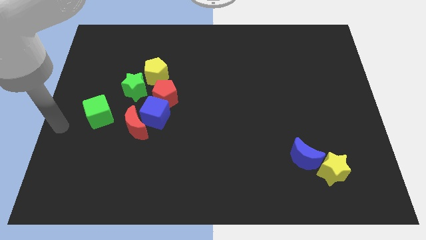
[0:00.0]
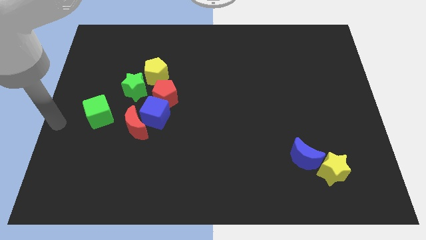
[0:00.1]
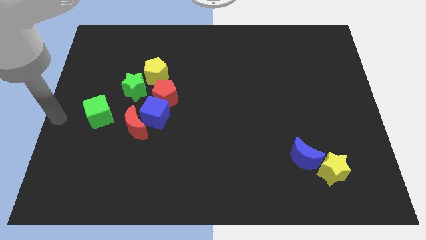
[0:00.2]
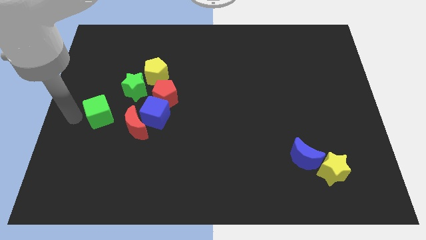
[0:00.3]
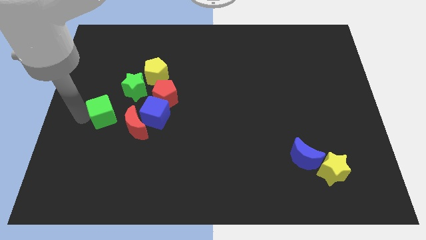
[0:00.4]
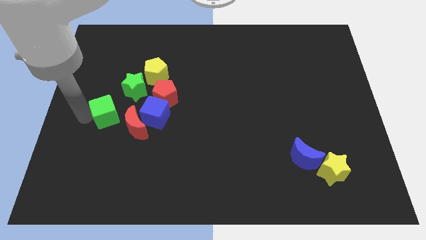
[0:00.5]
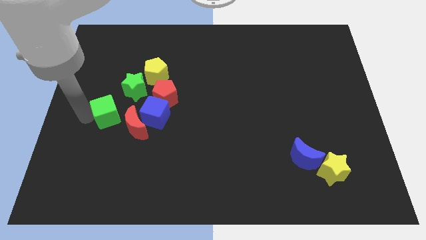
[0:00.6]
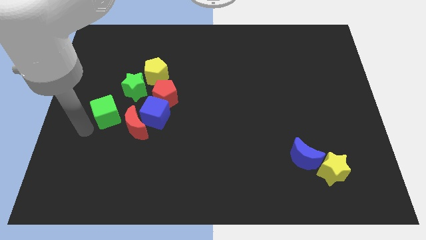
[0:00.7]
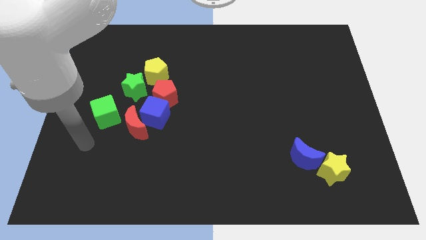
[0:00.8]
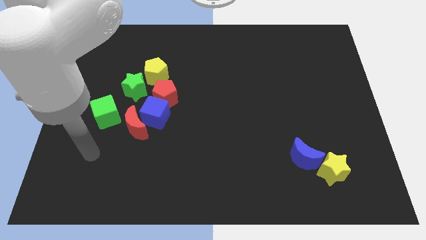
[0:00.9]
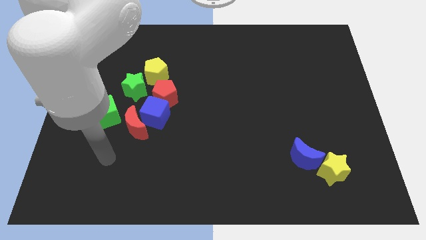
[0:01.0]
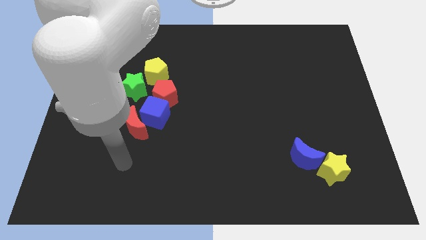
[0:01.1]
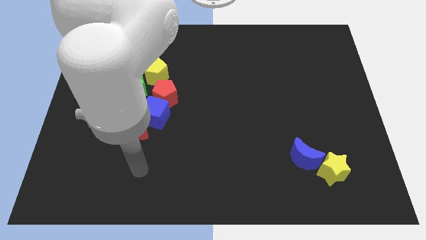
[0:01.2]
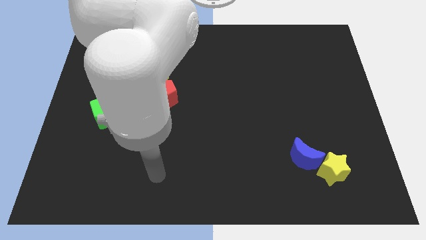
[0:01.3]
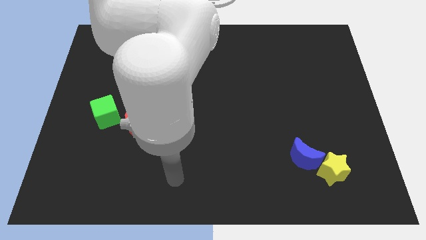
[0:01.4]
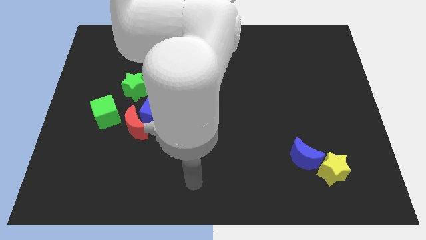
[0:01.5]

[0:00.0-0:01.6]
go to the bottom side of the table

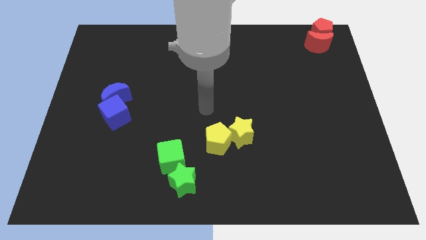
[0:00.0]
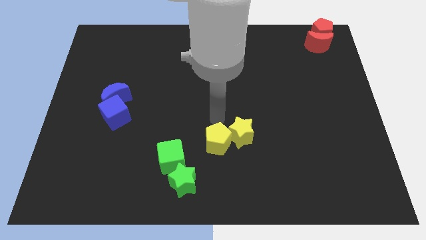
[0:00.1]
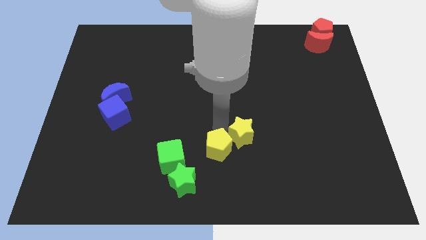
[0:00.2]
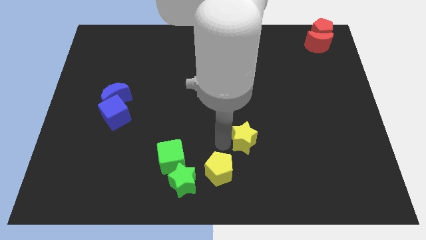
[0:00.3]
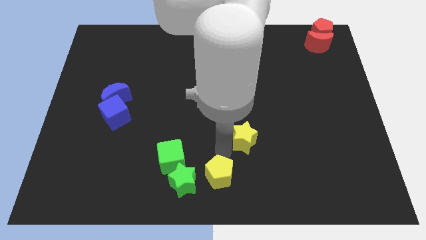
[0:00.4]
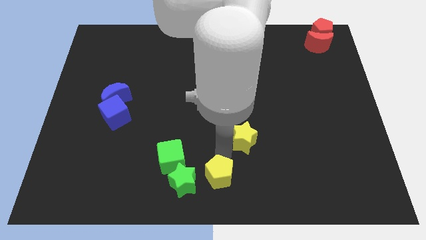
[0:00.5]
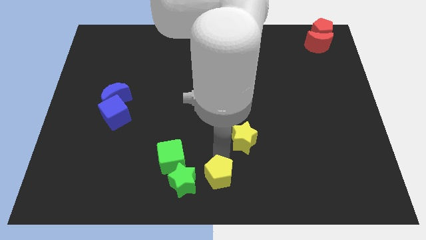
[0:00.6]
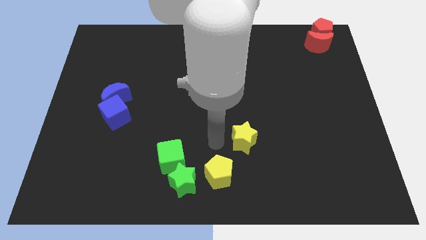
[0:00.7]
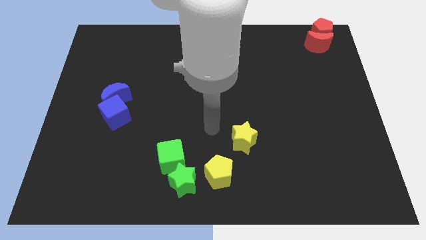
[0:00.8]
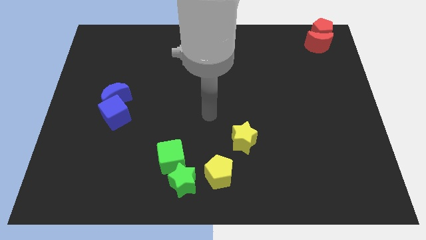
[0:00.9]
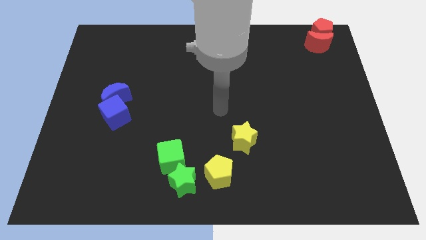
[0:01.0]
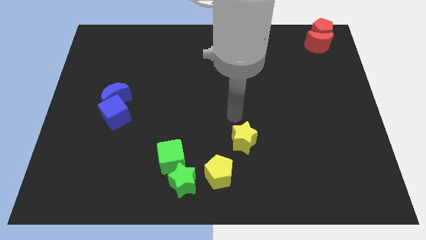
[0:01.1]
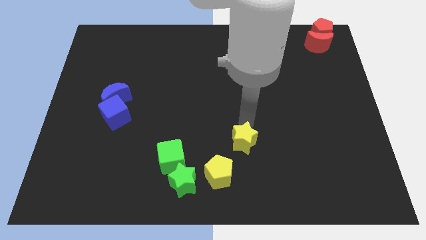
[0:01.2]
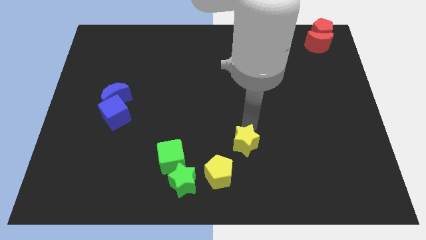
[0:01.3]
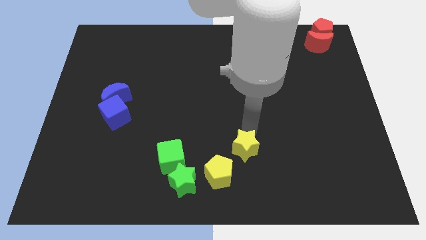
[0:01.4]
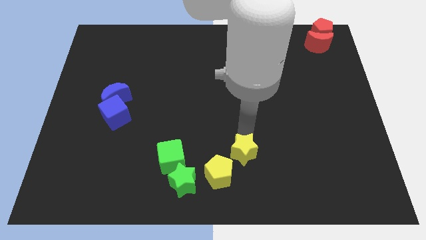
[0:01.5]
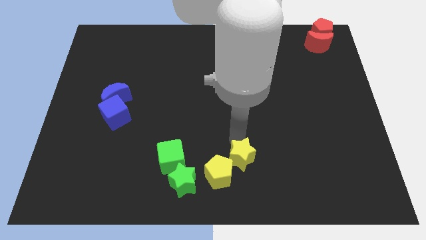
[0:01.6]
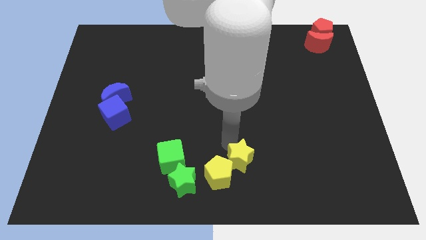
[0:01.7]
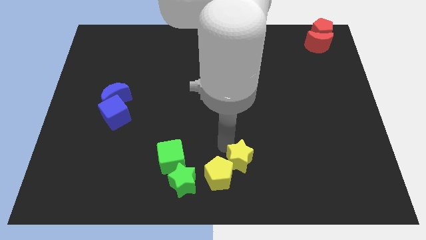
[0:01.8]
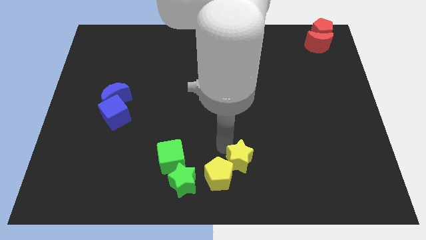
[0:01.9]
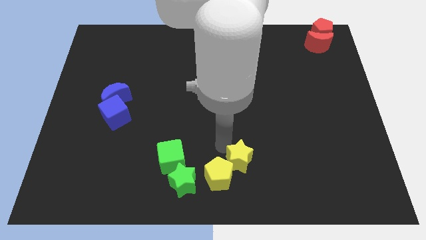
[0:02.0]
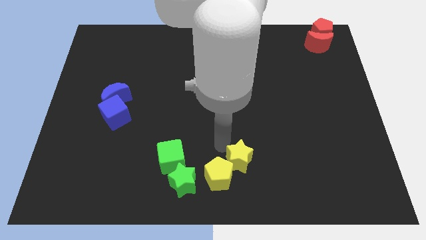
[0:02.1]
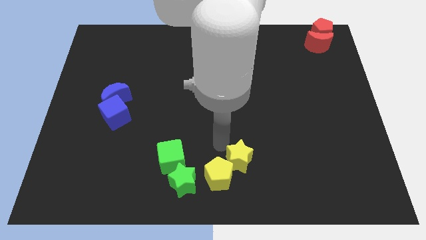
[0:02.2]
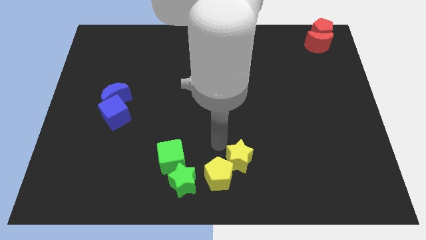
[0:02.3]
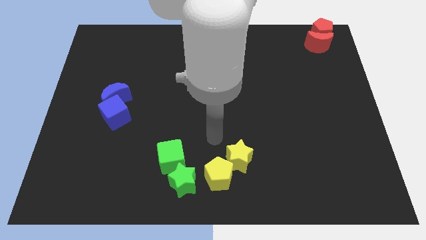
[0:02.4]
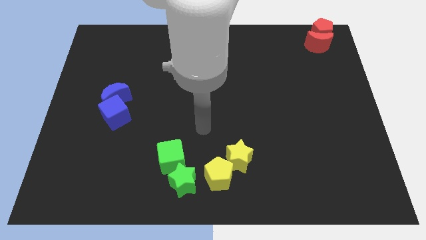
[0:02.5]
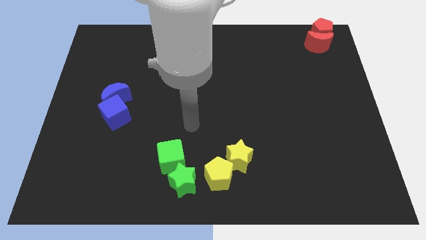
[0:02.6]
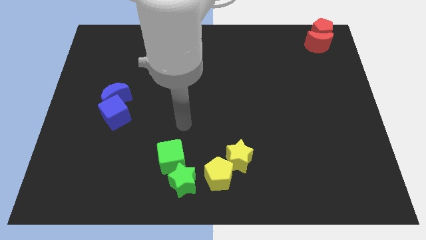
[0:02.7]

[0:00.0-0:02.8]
push the yellow blocks to the right of the green blocks

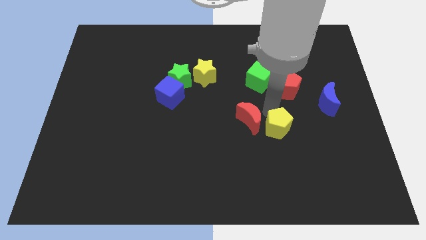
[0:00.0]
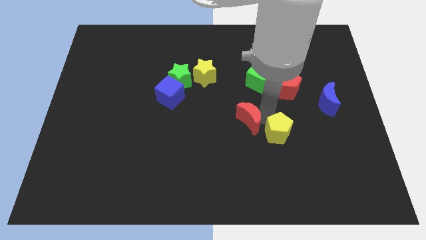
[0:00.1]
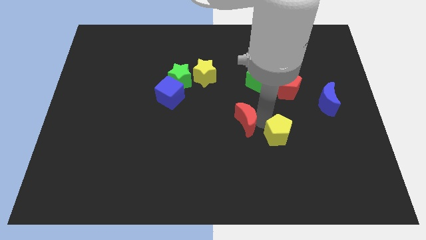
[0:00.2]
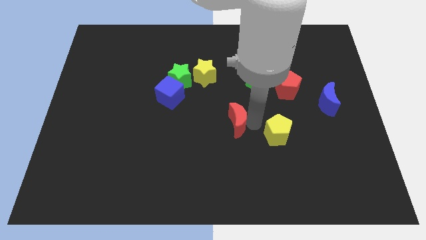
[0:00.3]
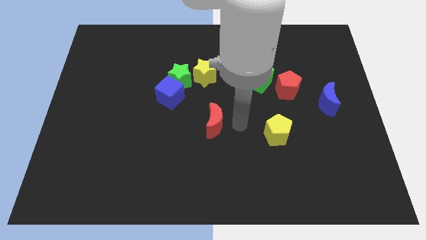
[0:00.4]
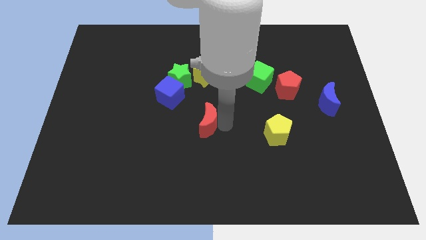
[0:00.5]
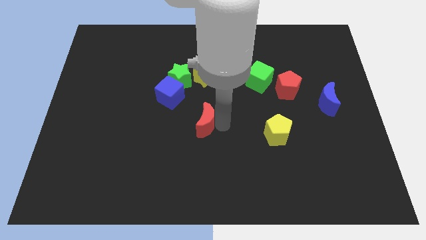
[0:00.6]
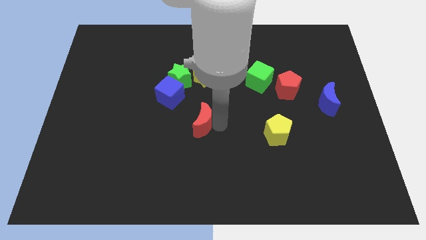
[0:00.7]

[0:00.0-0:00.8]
place red moon to the bottom yellow star

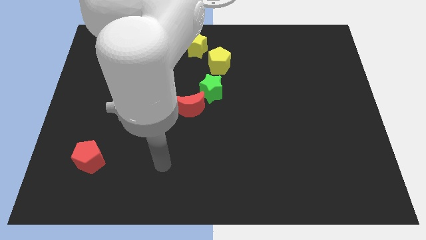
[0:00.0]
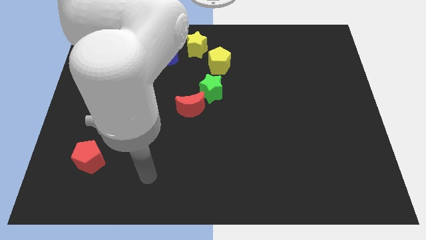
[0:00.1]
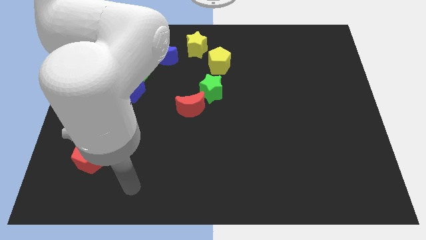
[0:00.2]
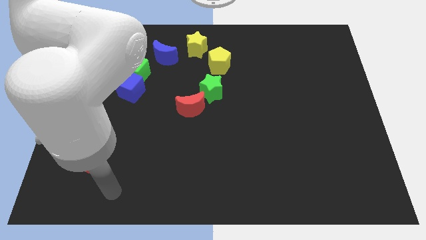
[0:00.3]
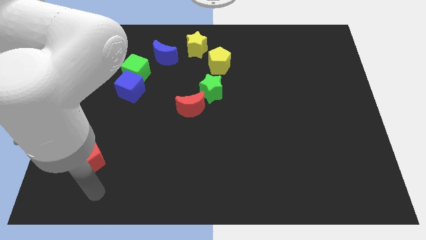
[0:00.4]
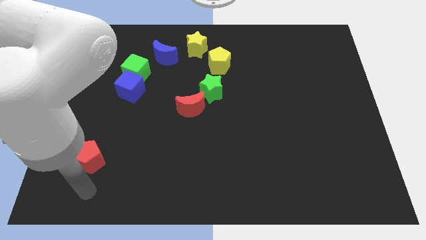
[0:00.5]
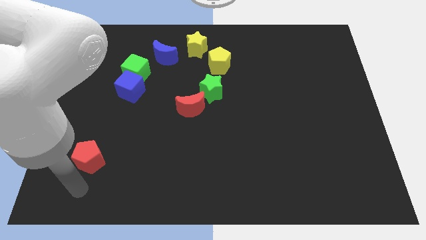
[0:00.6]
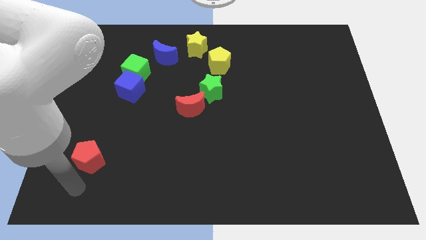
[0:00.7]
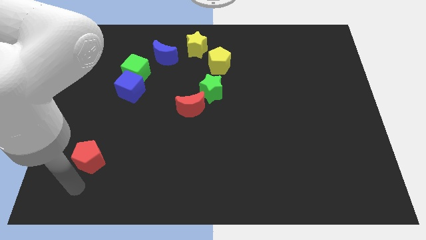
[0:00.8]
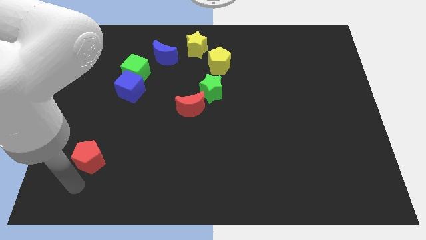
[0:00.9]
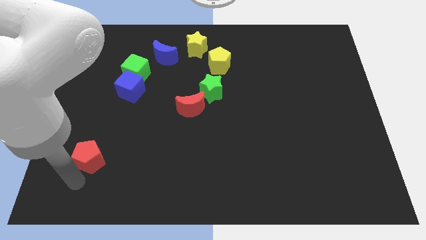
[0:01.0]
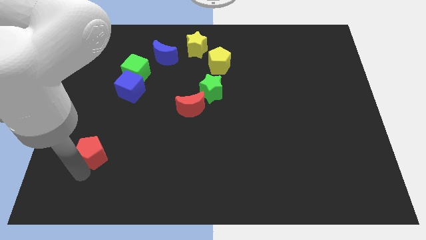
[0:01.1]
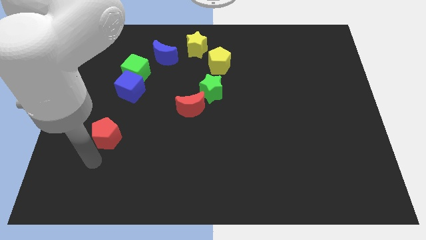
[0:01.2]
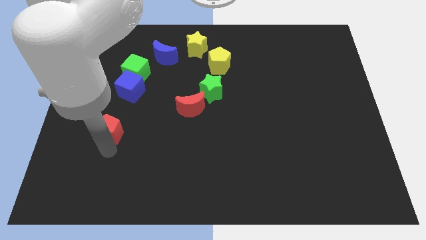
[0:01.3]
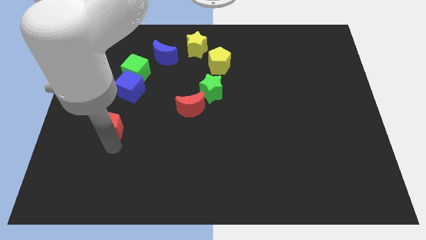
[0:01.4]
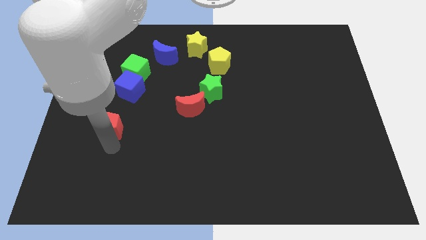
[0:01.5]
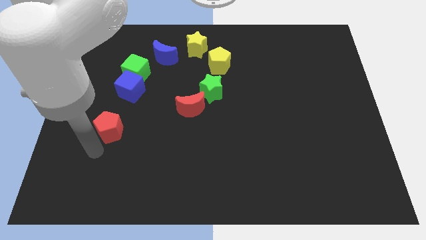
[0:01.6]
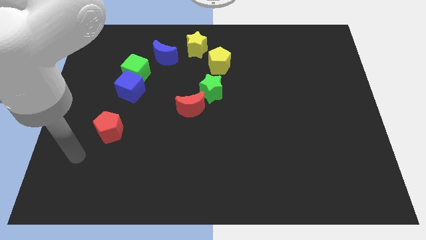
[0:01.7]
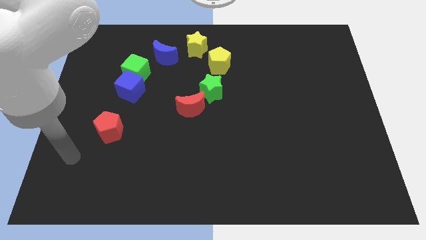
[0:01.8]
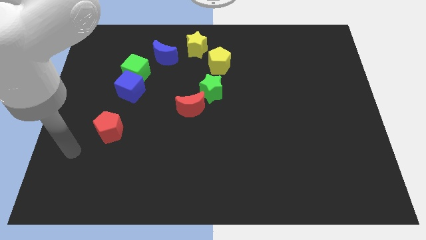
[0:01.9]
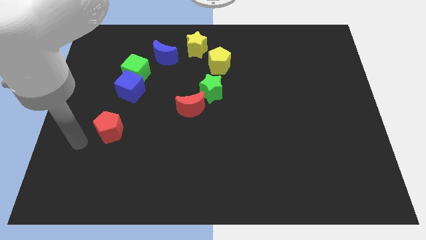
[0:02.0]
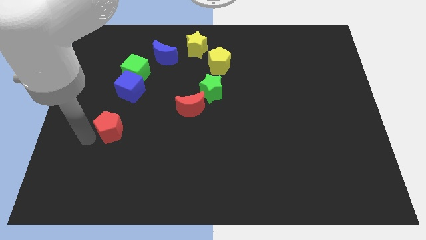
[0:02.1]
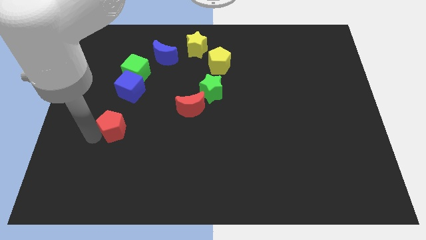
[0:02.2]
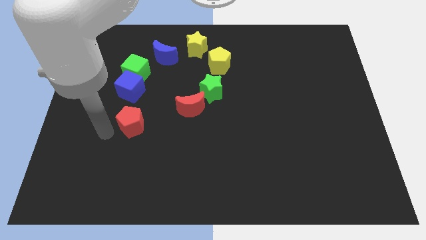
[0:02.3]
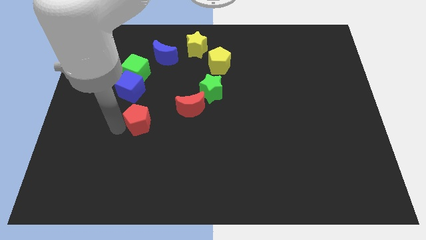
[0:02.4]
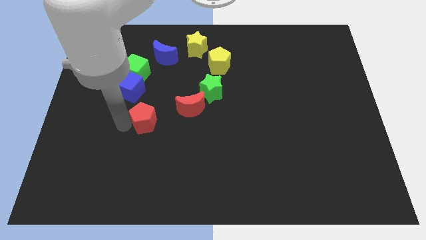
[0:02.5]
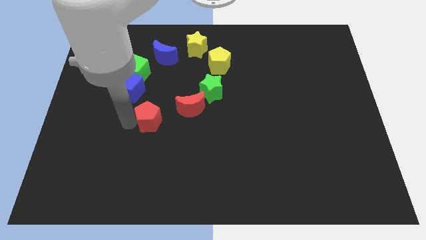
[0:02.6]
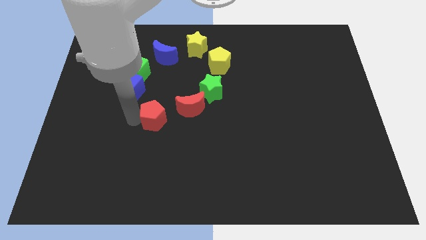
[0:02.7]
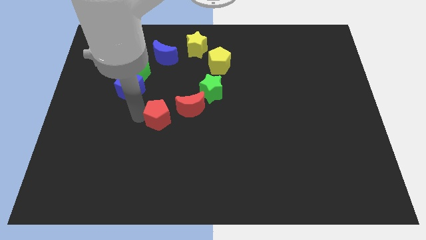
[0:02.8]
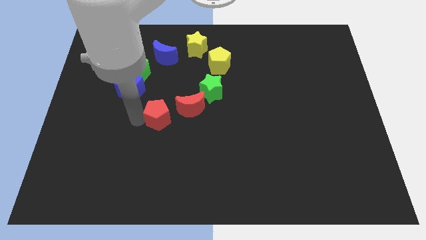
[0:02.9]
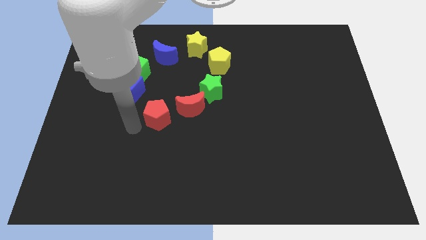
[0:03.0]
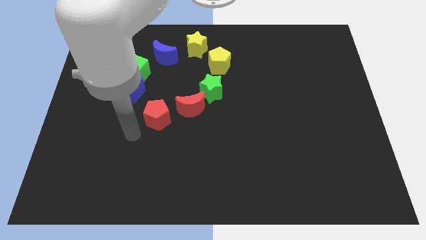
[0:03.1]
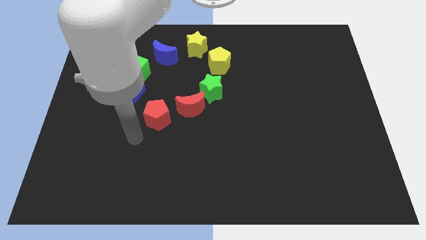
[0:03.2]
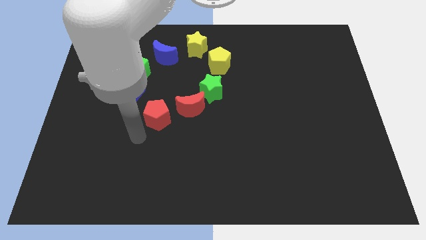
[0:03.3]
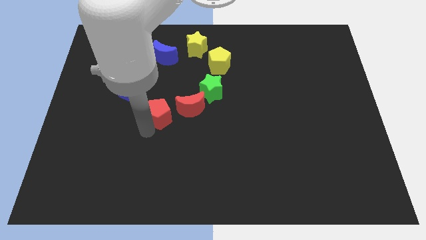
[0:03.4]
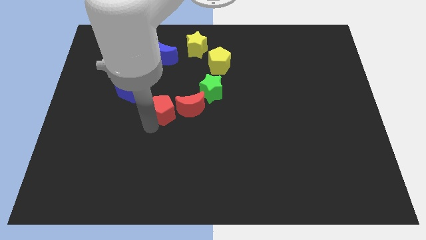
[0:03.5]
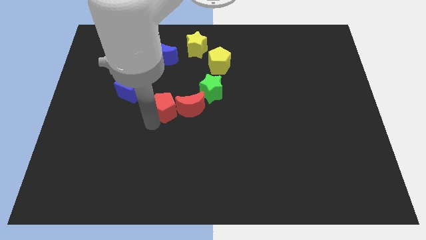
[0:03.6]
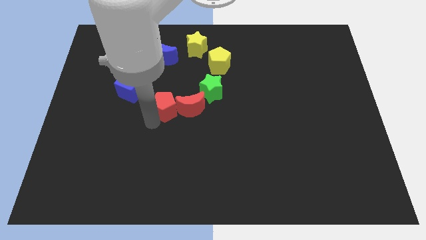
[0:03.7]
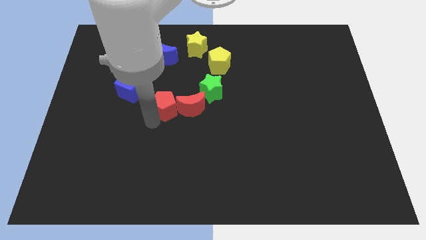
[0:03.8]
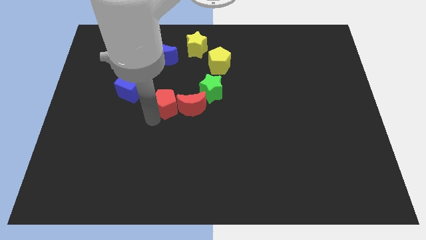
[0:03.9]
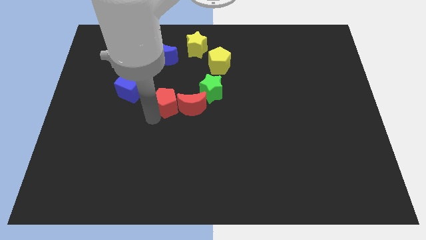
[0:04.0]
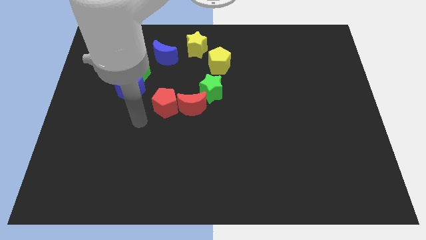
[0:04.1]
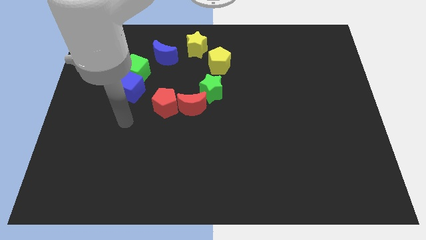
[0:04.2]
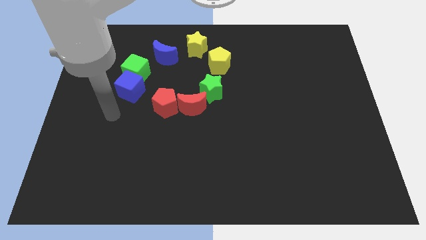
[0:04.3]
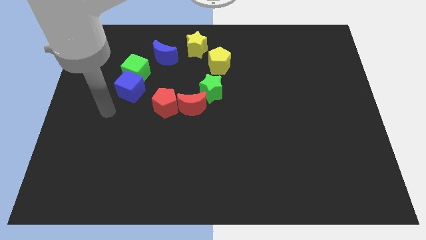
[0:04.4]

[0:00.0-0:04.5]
place the red pentagon in between red moon and blue cube
